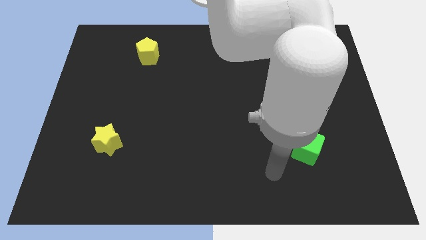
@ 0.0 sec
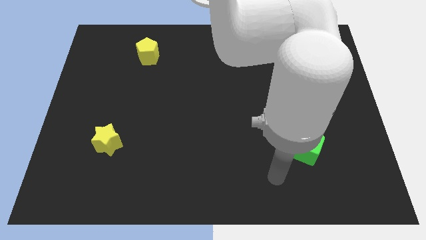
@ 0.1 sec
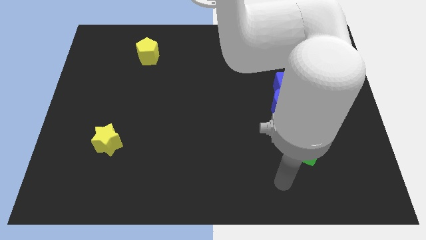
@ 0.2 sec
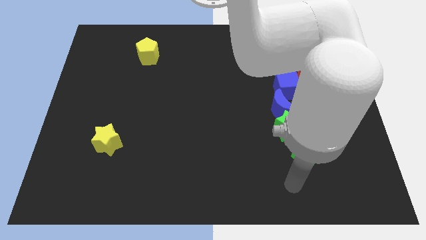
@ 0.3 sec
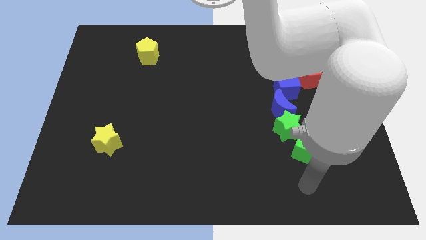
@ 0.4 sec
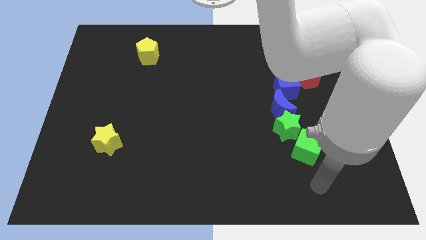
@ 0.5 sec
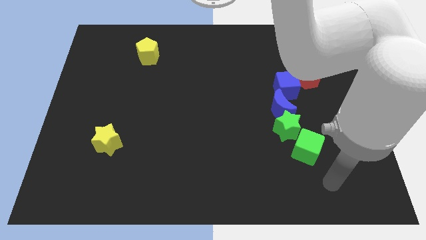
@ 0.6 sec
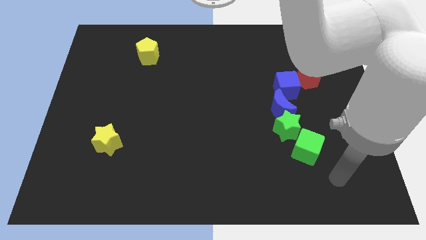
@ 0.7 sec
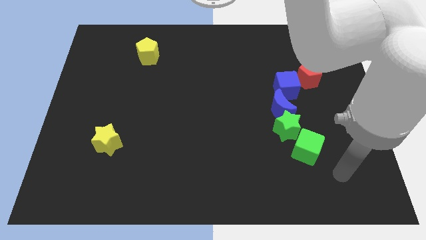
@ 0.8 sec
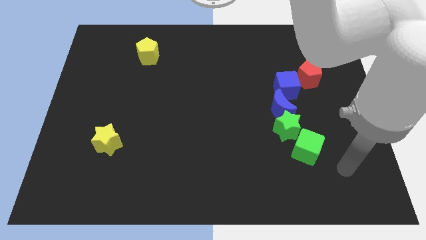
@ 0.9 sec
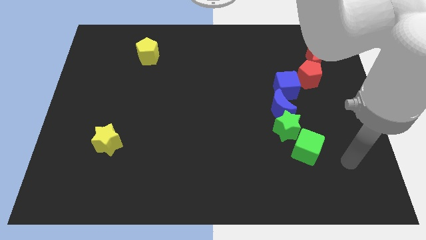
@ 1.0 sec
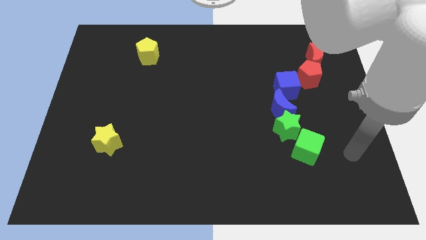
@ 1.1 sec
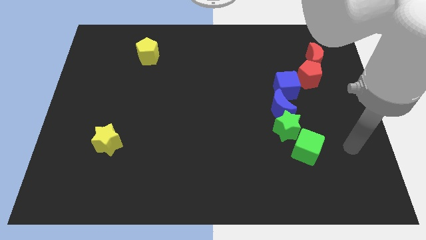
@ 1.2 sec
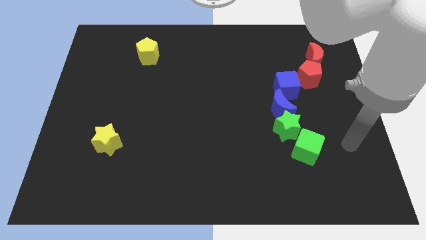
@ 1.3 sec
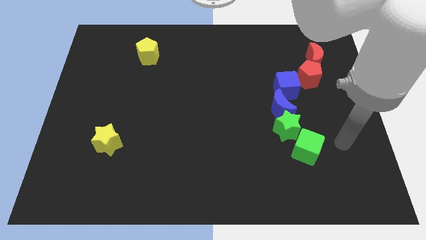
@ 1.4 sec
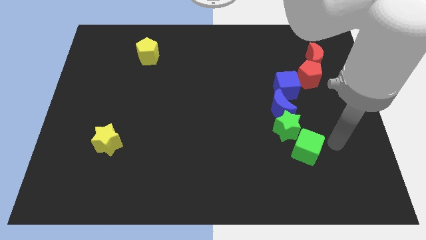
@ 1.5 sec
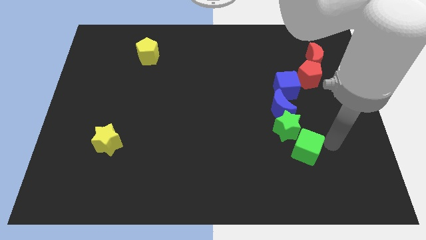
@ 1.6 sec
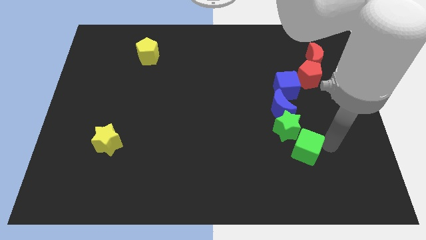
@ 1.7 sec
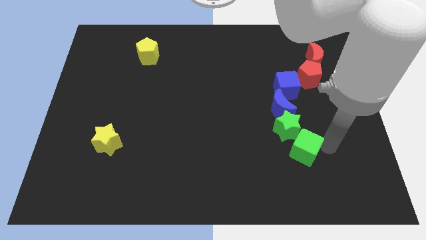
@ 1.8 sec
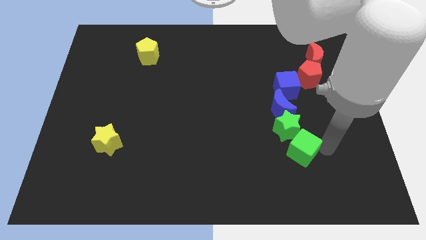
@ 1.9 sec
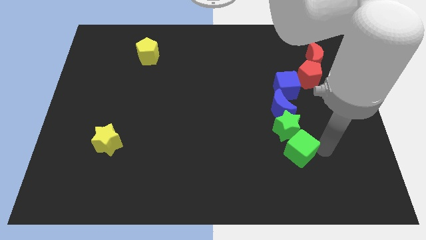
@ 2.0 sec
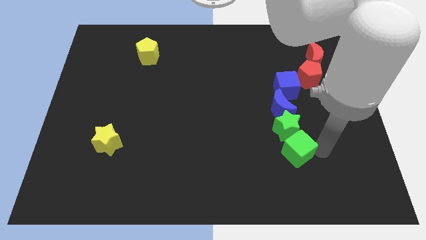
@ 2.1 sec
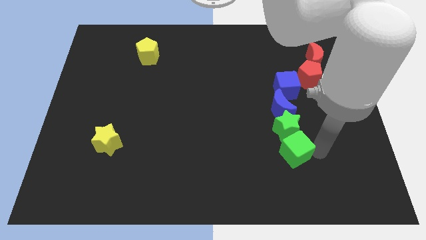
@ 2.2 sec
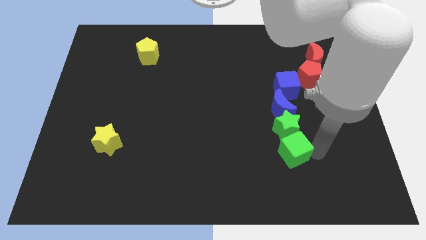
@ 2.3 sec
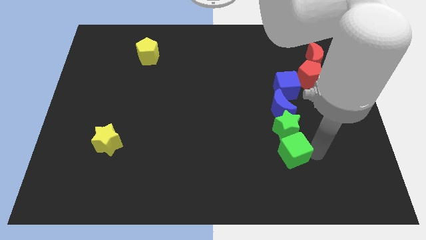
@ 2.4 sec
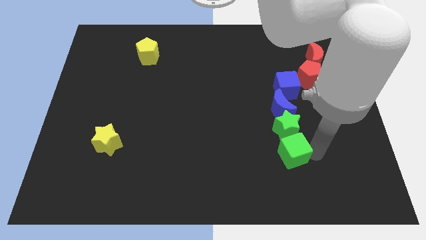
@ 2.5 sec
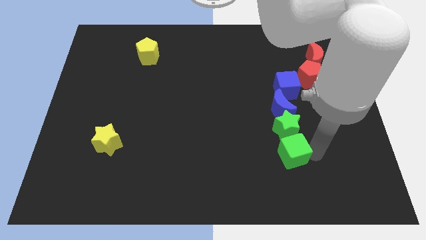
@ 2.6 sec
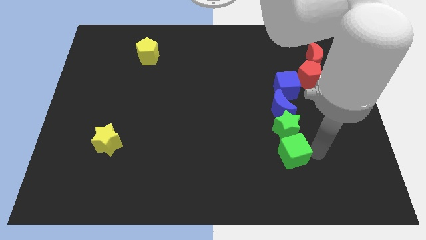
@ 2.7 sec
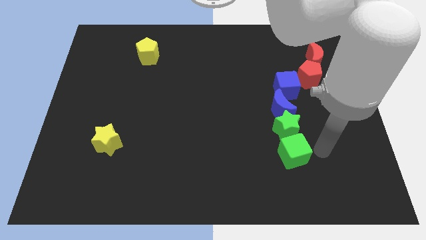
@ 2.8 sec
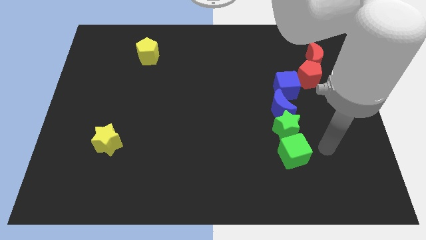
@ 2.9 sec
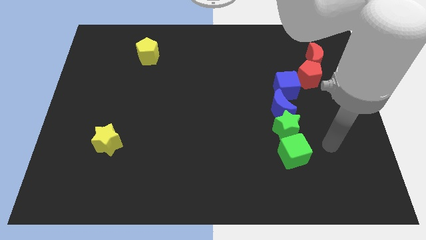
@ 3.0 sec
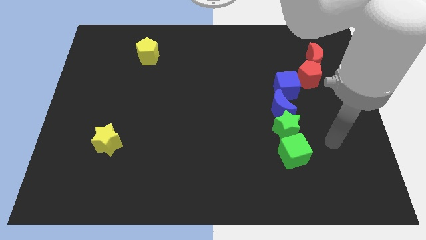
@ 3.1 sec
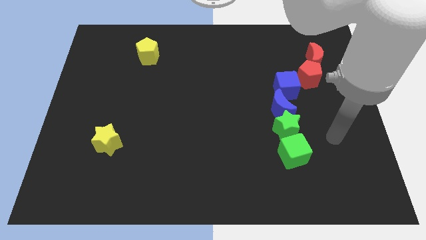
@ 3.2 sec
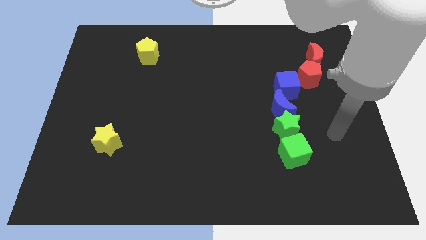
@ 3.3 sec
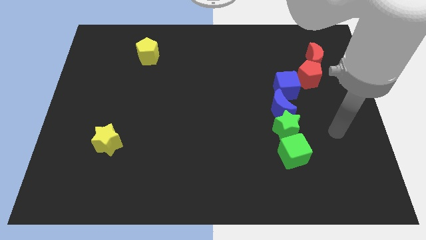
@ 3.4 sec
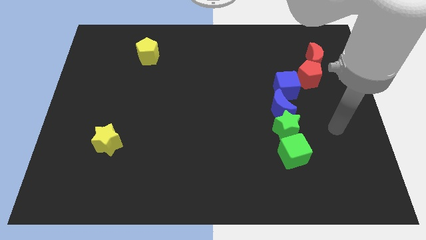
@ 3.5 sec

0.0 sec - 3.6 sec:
adjust the green cube vertically below the green star

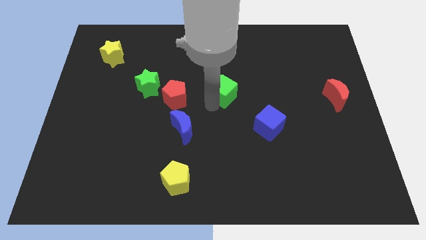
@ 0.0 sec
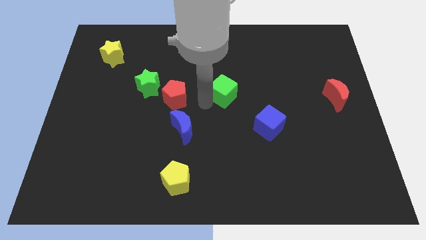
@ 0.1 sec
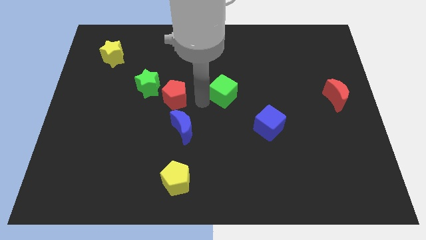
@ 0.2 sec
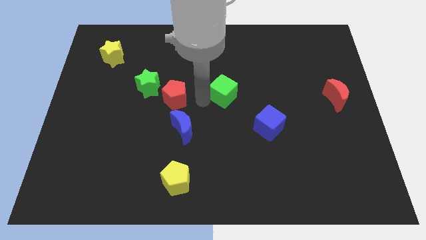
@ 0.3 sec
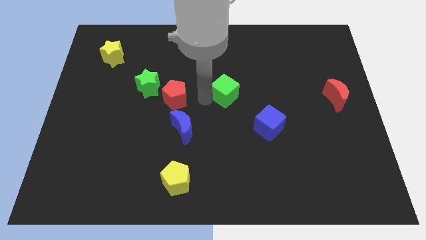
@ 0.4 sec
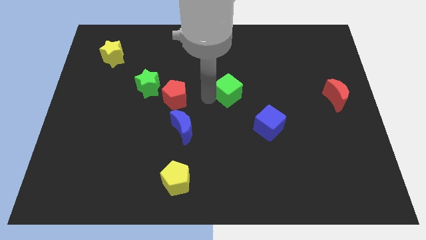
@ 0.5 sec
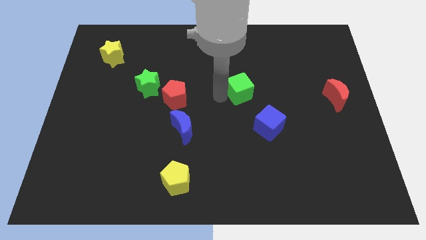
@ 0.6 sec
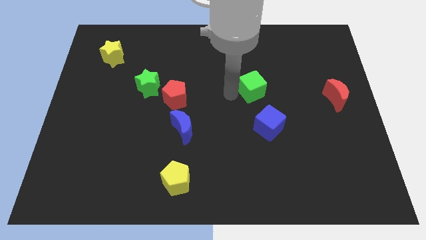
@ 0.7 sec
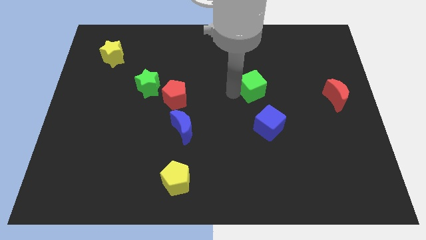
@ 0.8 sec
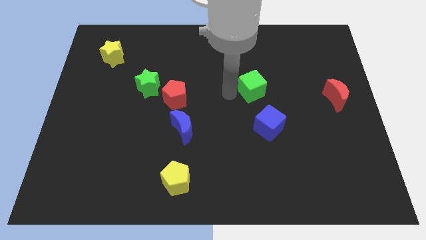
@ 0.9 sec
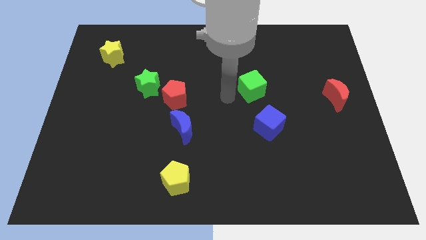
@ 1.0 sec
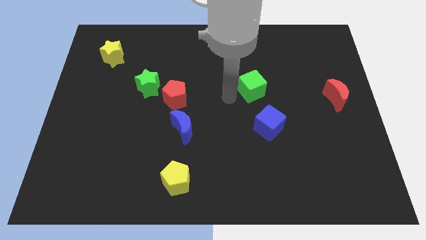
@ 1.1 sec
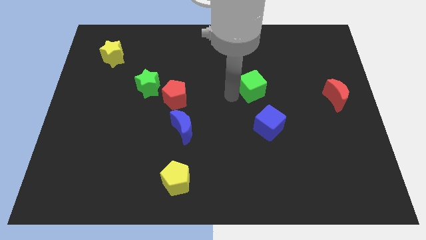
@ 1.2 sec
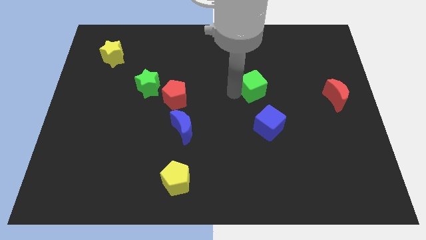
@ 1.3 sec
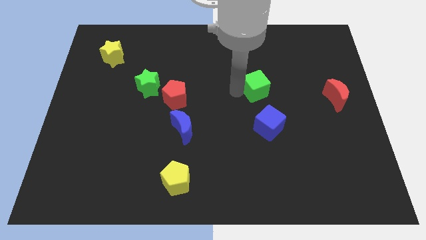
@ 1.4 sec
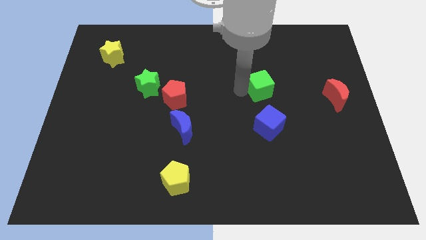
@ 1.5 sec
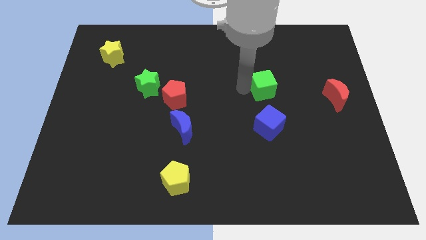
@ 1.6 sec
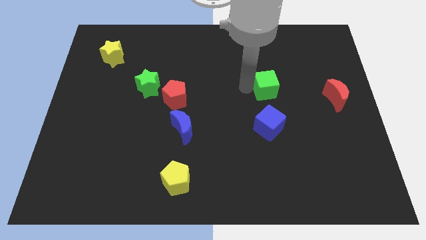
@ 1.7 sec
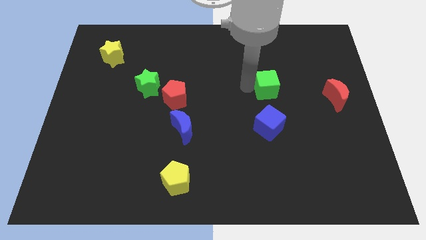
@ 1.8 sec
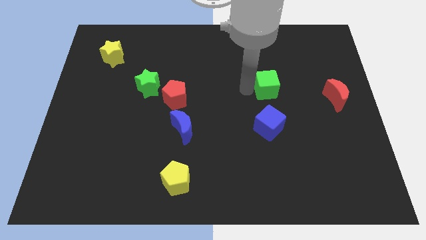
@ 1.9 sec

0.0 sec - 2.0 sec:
put the green cube above the blue cube

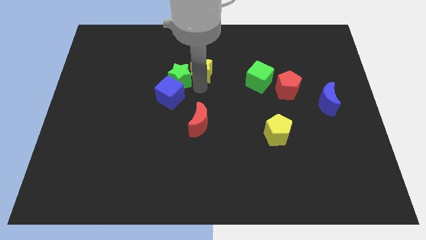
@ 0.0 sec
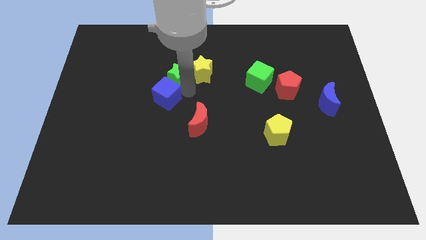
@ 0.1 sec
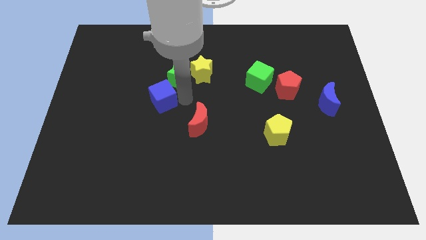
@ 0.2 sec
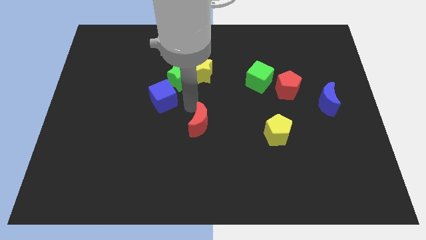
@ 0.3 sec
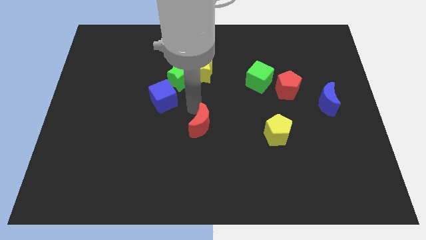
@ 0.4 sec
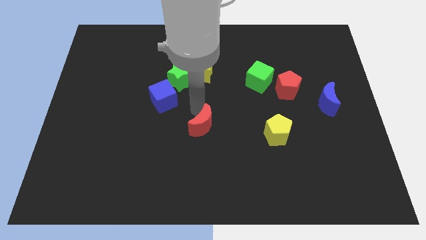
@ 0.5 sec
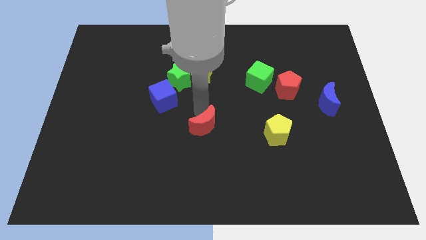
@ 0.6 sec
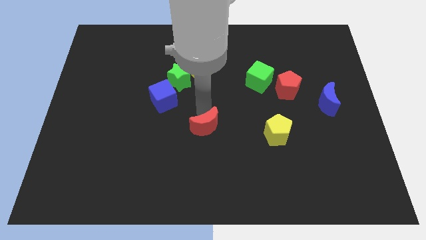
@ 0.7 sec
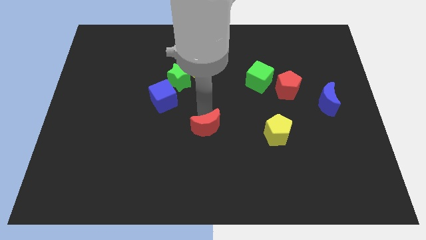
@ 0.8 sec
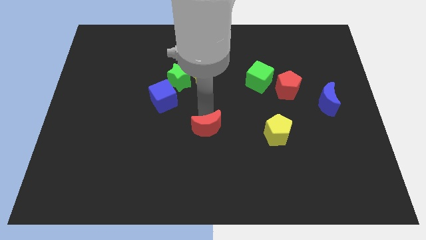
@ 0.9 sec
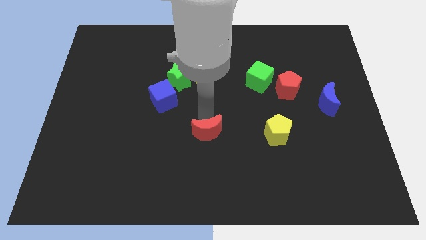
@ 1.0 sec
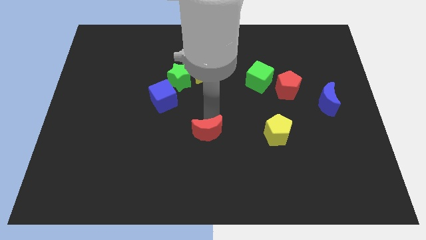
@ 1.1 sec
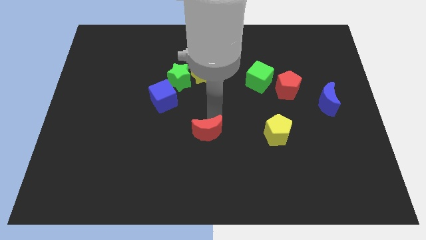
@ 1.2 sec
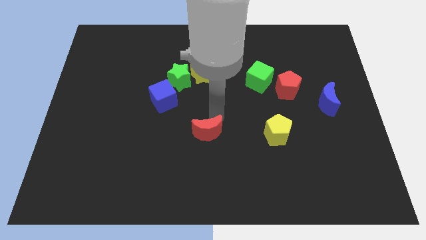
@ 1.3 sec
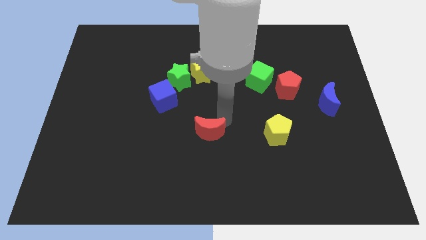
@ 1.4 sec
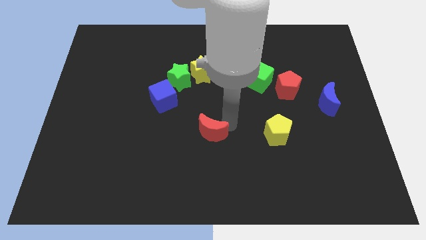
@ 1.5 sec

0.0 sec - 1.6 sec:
place red moon to the left of yellow pentagon

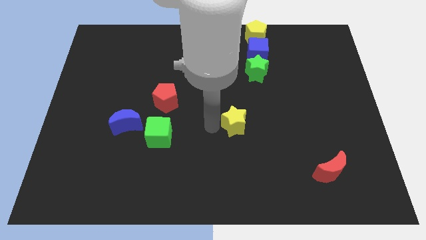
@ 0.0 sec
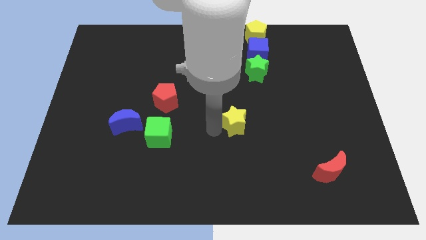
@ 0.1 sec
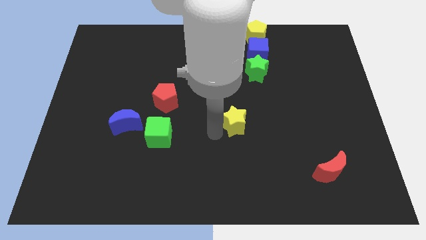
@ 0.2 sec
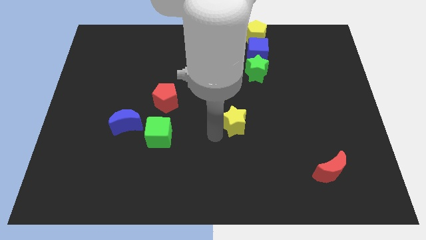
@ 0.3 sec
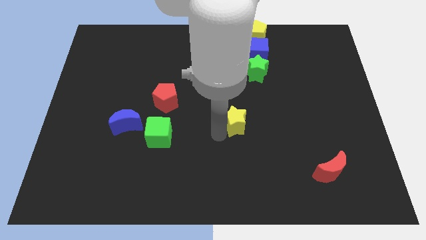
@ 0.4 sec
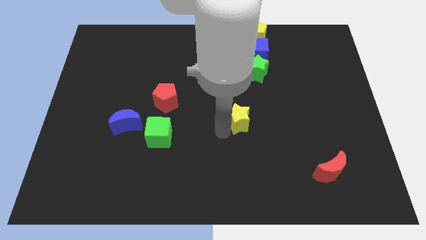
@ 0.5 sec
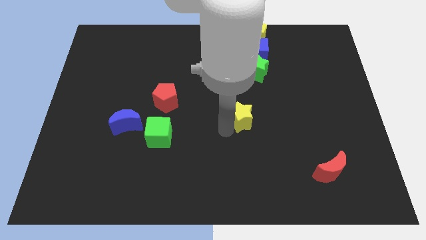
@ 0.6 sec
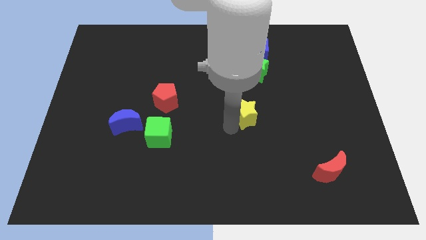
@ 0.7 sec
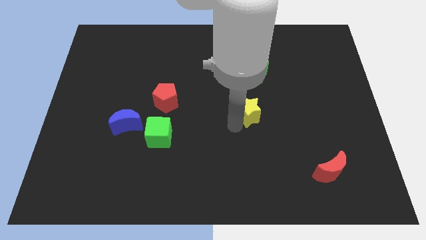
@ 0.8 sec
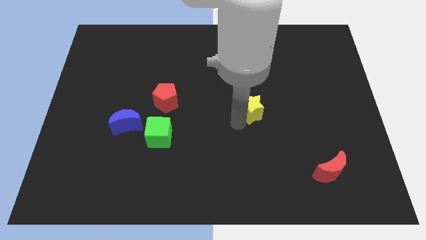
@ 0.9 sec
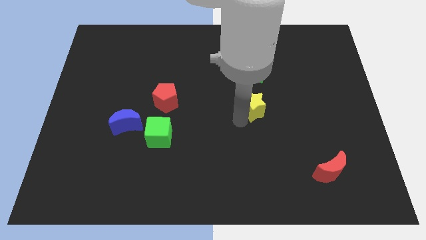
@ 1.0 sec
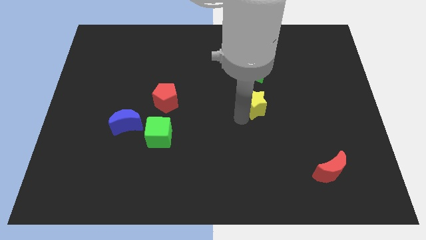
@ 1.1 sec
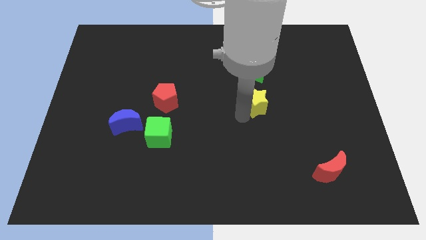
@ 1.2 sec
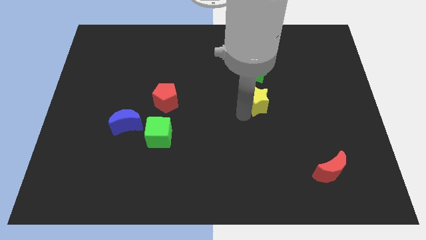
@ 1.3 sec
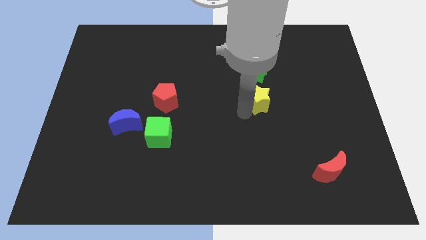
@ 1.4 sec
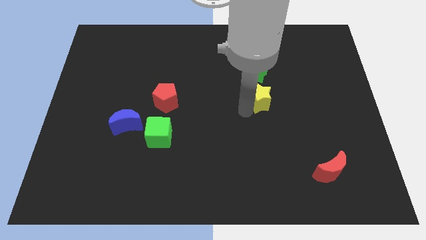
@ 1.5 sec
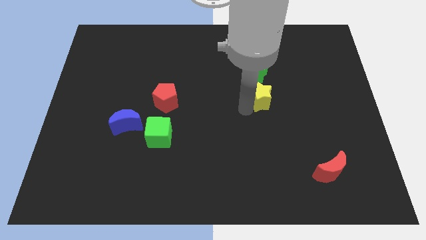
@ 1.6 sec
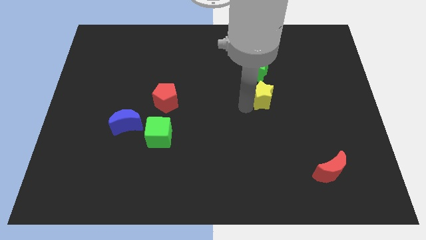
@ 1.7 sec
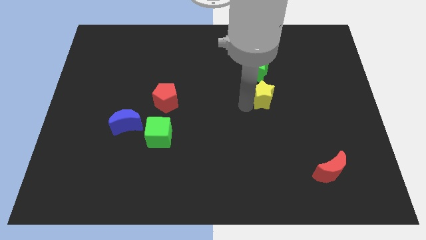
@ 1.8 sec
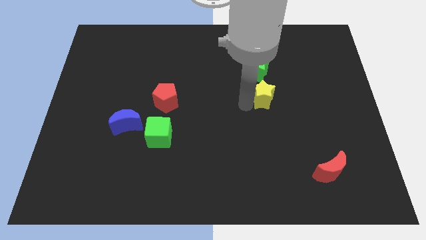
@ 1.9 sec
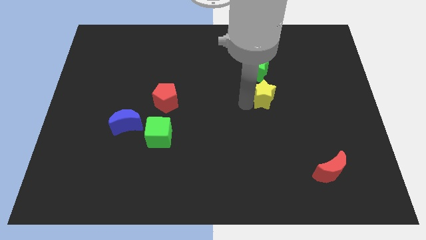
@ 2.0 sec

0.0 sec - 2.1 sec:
place yellow star to the right of red pentagon
